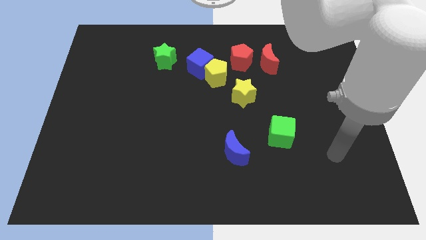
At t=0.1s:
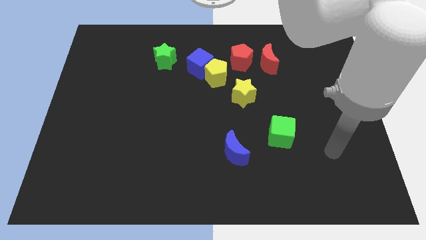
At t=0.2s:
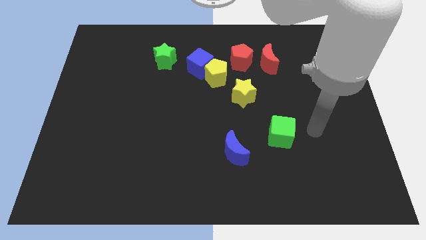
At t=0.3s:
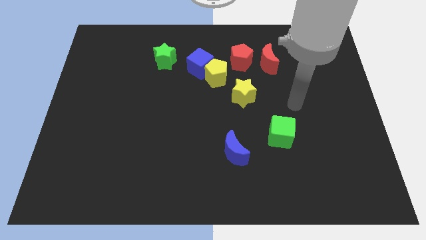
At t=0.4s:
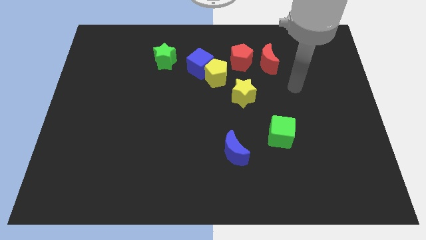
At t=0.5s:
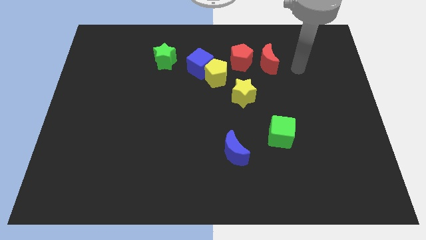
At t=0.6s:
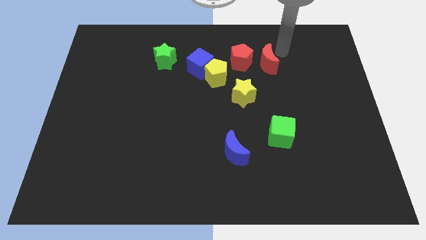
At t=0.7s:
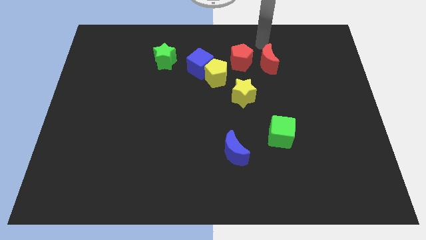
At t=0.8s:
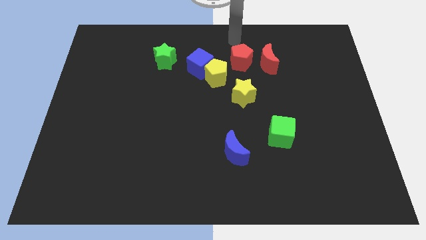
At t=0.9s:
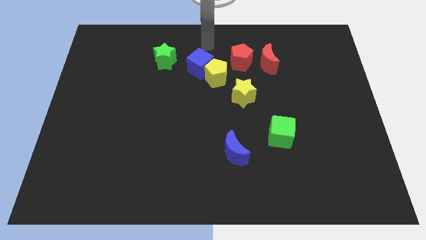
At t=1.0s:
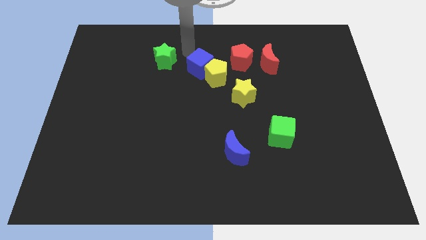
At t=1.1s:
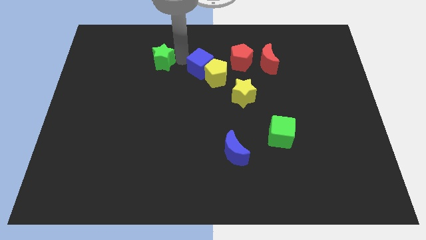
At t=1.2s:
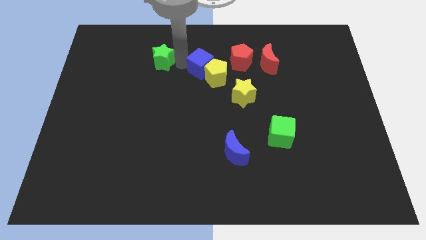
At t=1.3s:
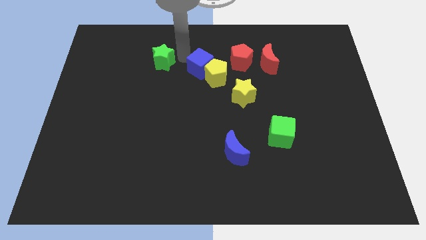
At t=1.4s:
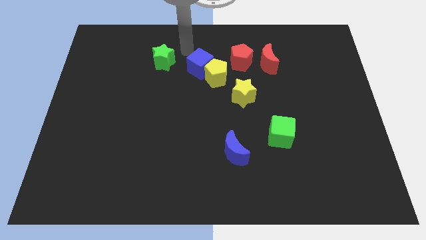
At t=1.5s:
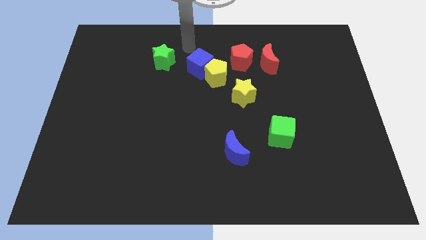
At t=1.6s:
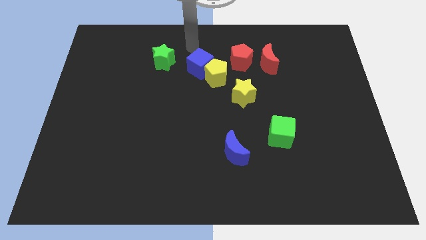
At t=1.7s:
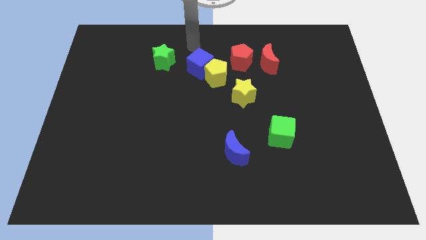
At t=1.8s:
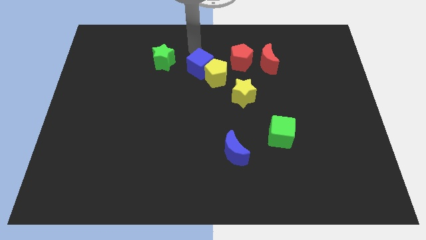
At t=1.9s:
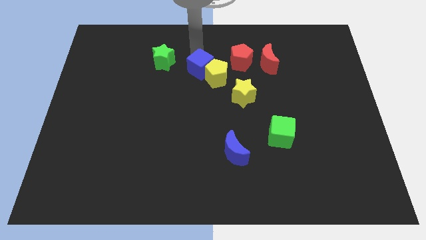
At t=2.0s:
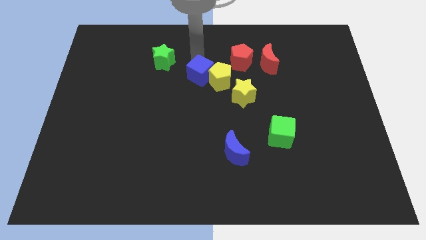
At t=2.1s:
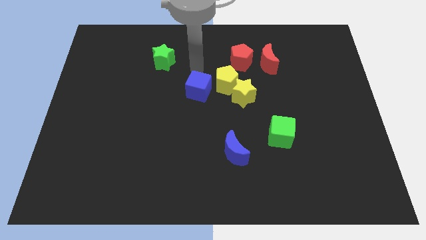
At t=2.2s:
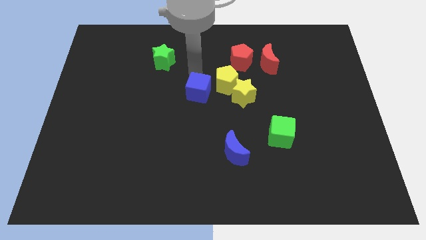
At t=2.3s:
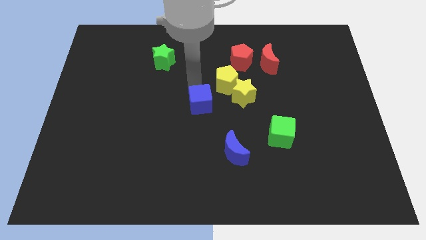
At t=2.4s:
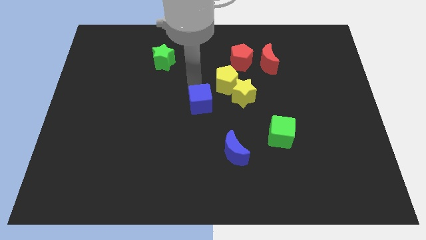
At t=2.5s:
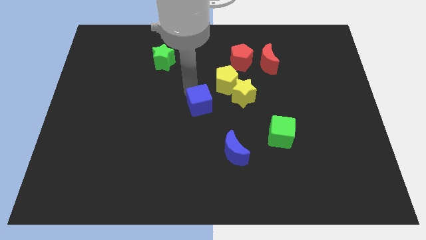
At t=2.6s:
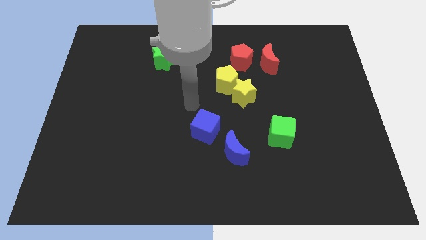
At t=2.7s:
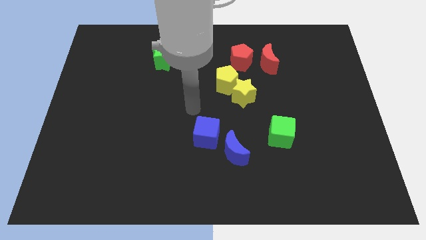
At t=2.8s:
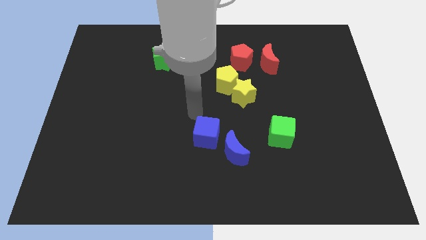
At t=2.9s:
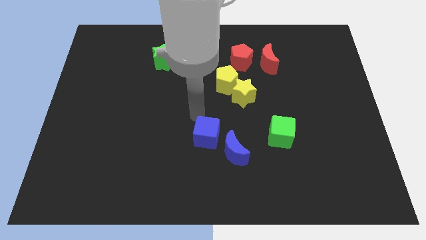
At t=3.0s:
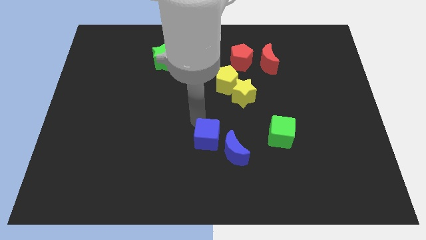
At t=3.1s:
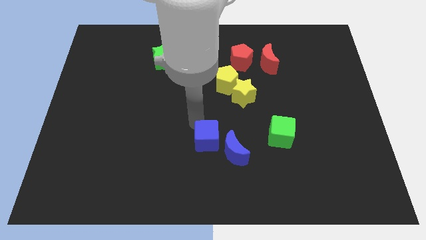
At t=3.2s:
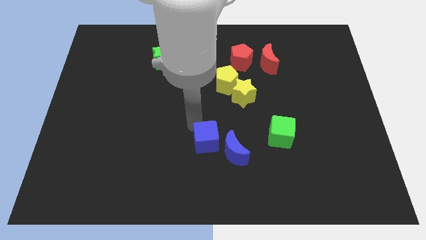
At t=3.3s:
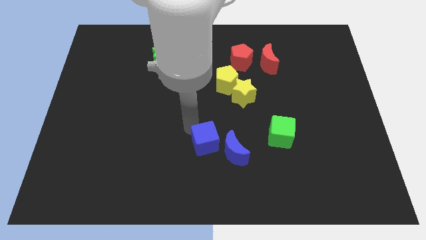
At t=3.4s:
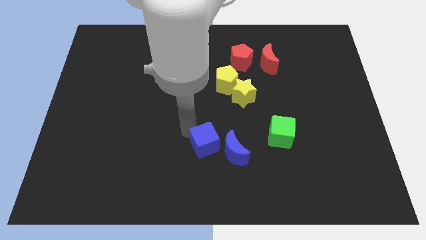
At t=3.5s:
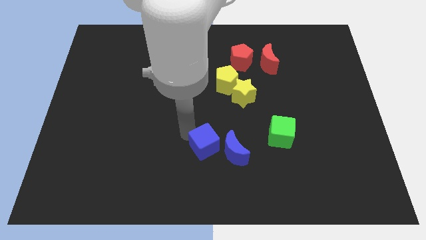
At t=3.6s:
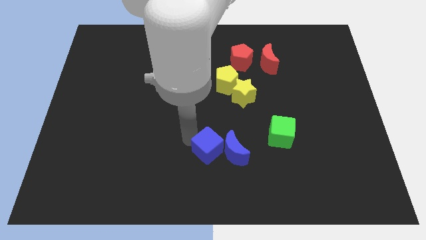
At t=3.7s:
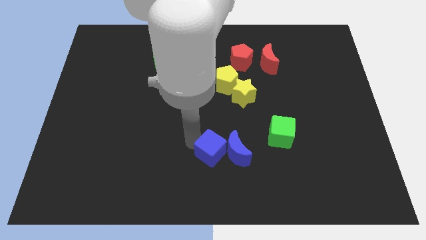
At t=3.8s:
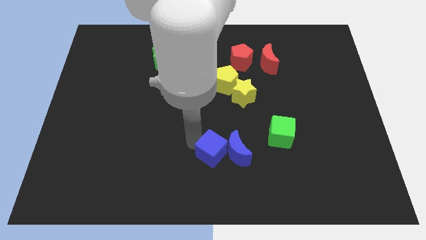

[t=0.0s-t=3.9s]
move the blue cube close to the blue moon

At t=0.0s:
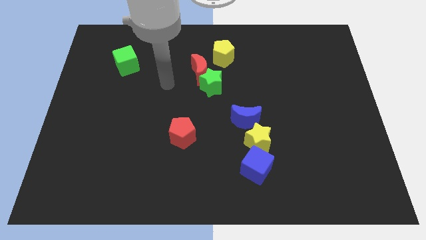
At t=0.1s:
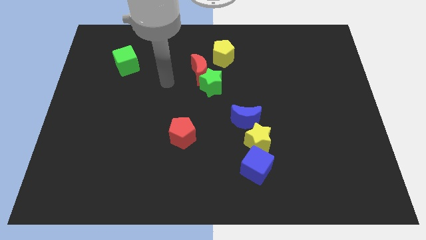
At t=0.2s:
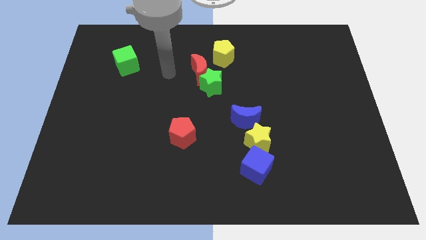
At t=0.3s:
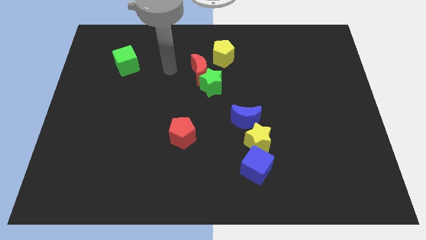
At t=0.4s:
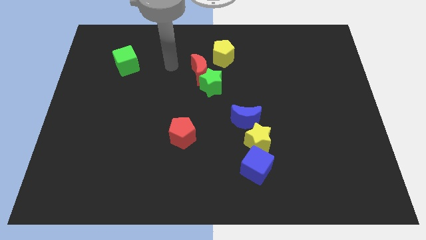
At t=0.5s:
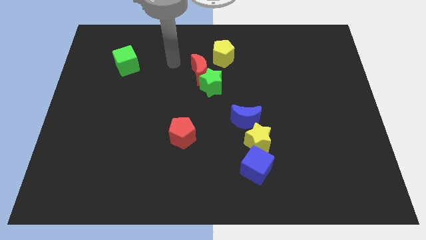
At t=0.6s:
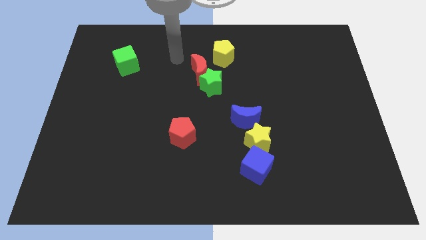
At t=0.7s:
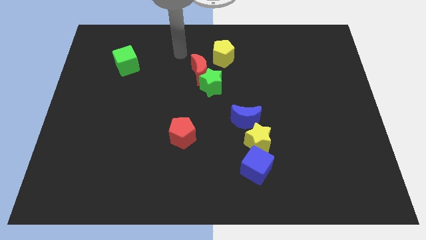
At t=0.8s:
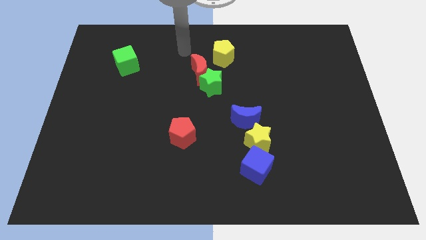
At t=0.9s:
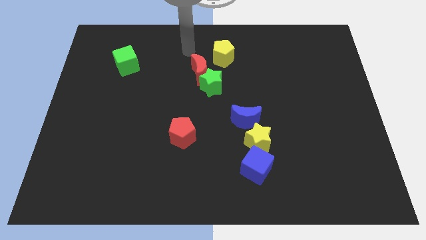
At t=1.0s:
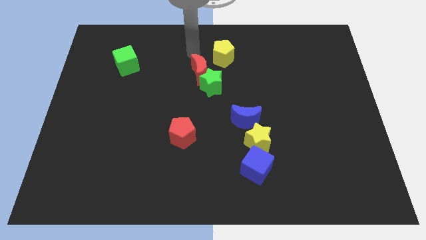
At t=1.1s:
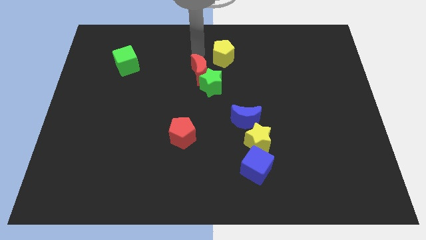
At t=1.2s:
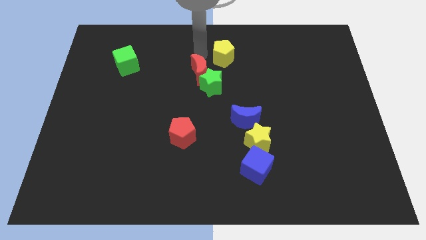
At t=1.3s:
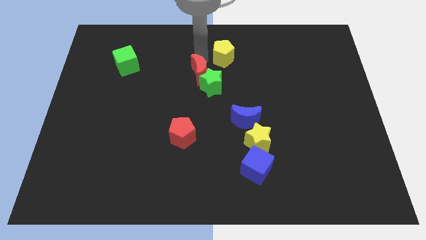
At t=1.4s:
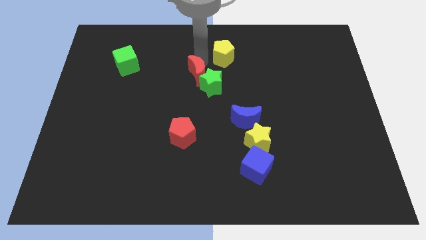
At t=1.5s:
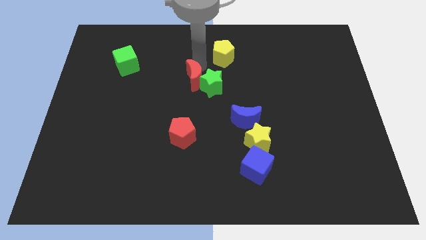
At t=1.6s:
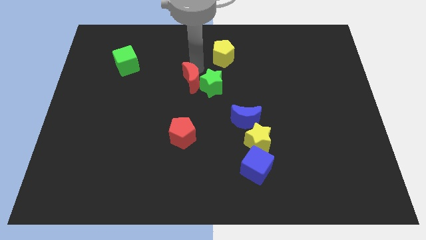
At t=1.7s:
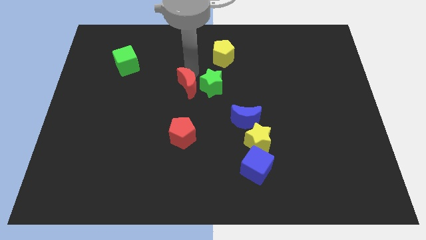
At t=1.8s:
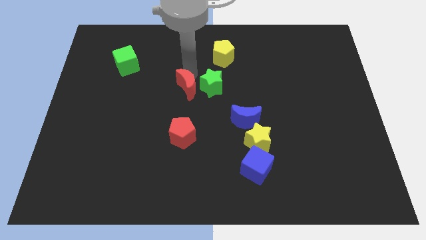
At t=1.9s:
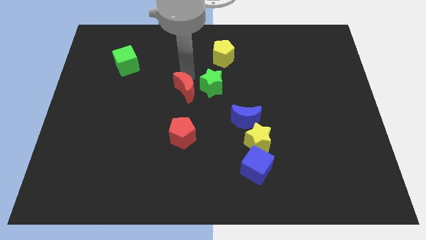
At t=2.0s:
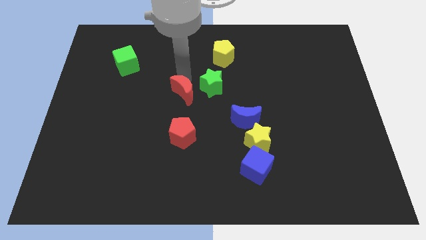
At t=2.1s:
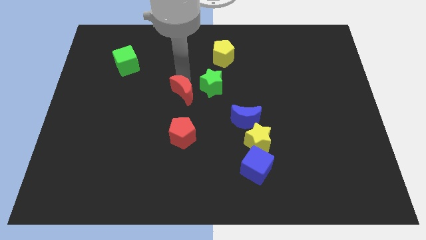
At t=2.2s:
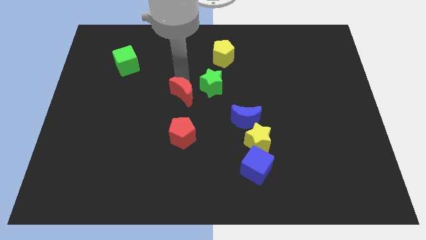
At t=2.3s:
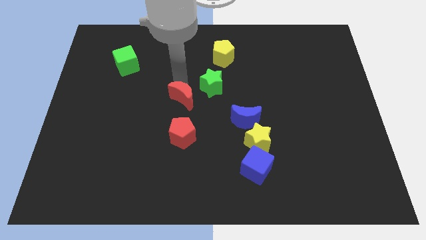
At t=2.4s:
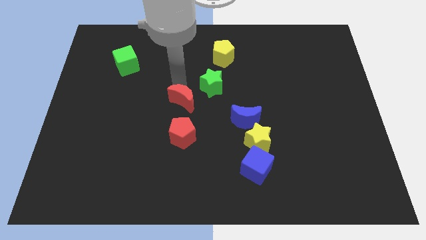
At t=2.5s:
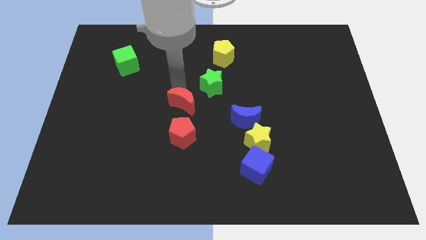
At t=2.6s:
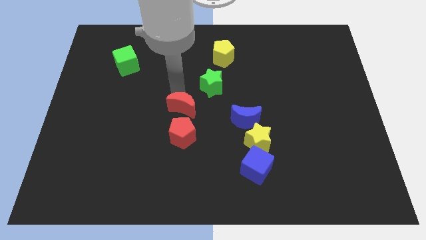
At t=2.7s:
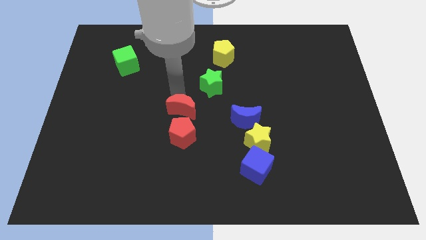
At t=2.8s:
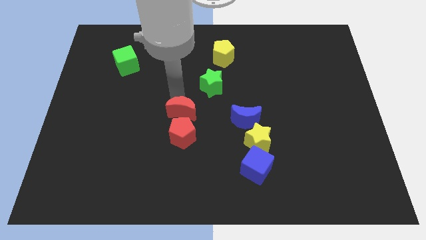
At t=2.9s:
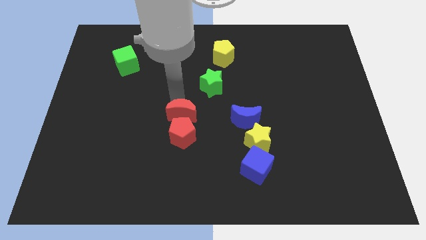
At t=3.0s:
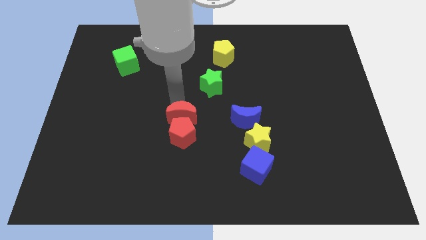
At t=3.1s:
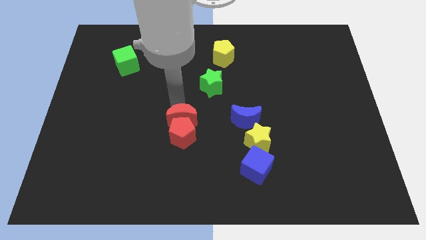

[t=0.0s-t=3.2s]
push the red moon towards the red pentagon

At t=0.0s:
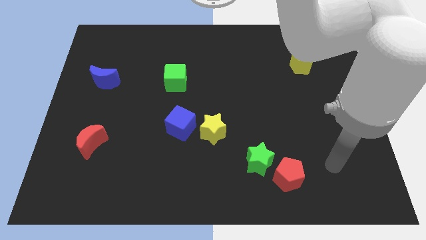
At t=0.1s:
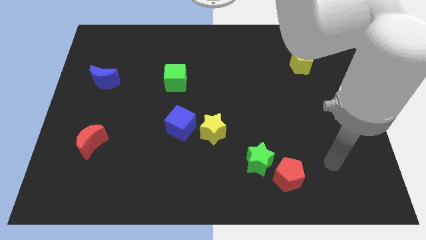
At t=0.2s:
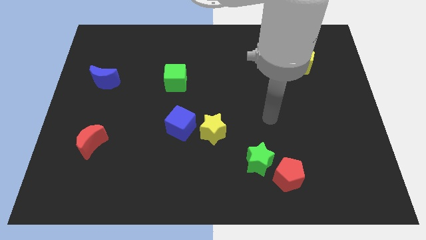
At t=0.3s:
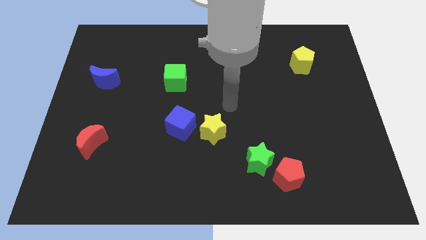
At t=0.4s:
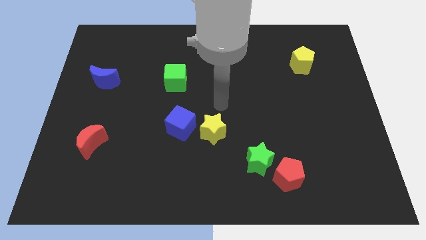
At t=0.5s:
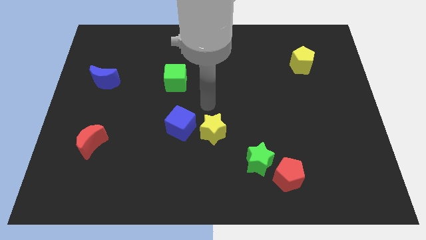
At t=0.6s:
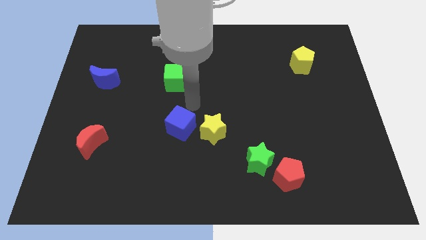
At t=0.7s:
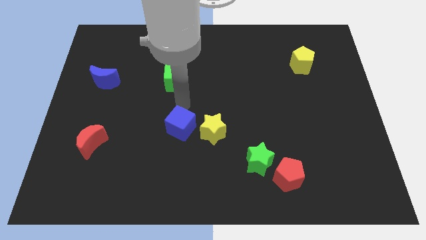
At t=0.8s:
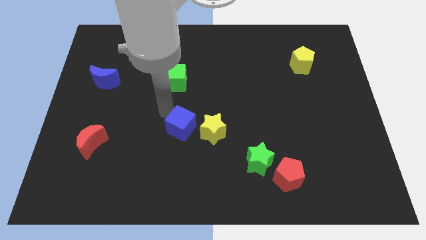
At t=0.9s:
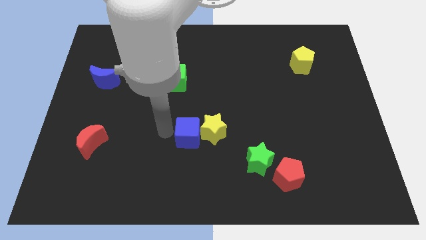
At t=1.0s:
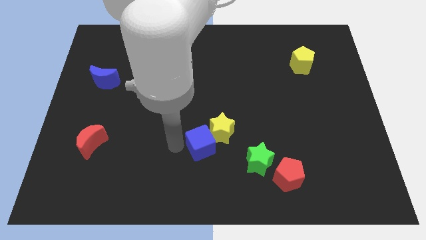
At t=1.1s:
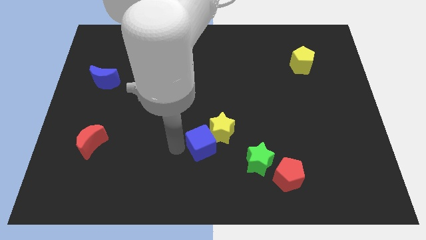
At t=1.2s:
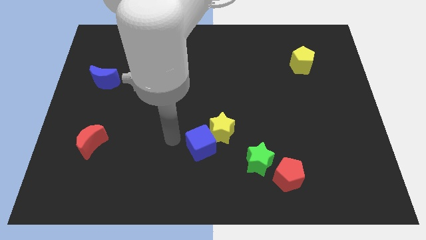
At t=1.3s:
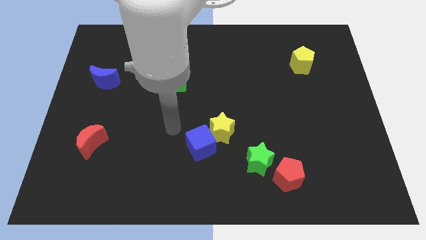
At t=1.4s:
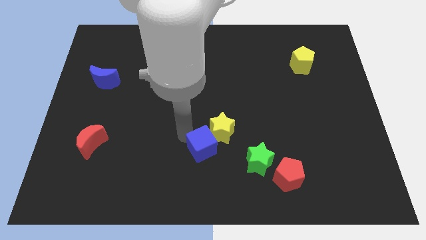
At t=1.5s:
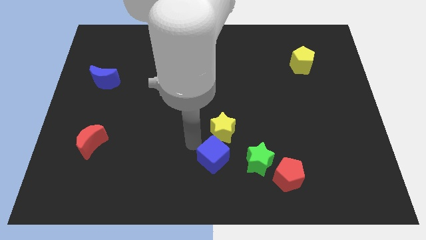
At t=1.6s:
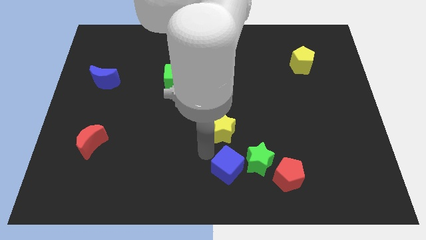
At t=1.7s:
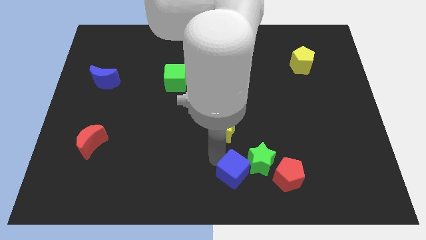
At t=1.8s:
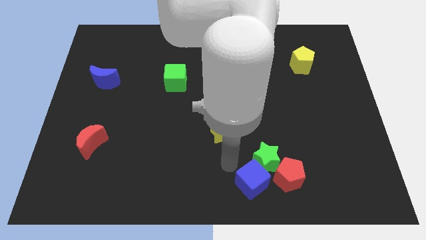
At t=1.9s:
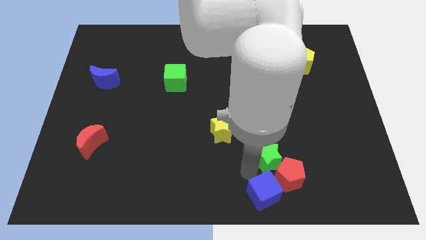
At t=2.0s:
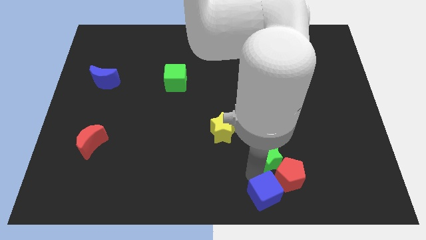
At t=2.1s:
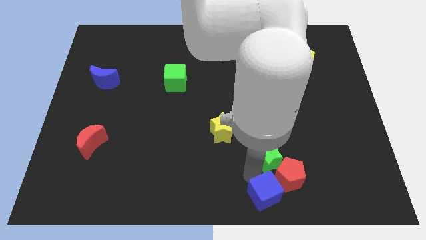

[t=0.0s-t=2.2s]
move the blue cube close to the red pentagon
